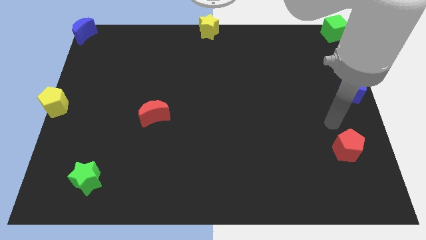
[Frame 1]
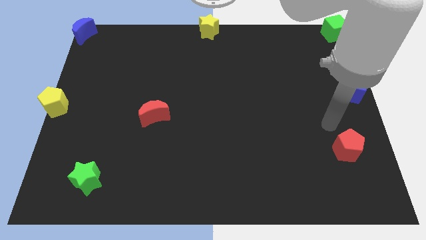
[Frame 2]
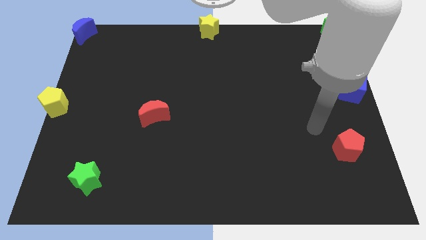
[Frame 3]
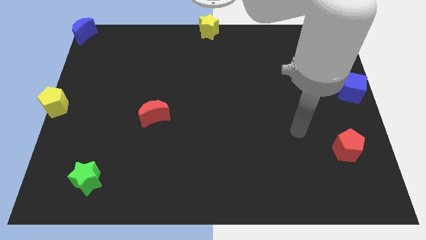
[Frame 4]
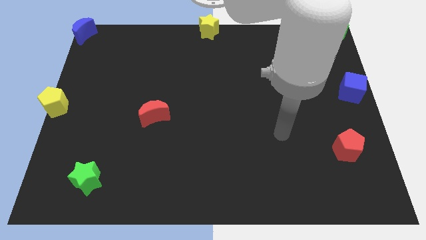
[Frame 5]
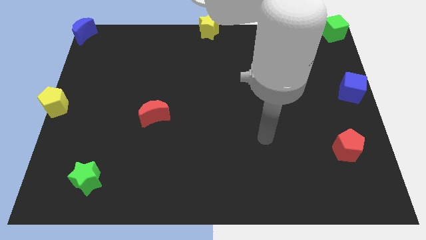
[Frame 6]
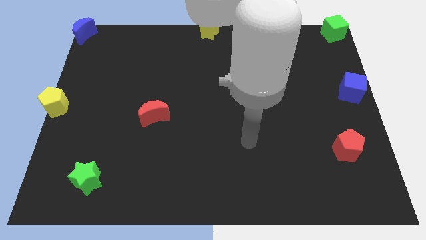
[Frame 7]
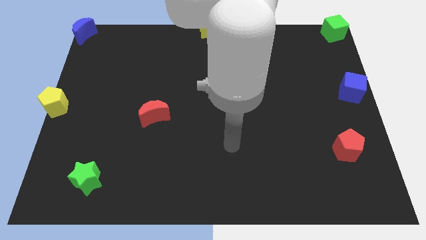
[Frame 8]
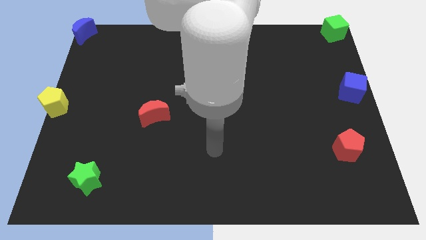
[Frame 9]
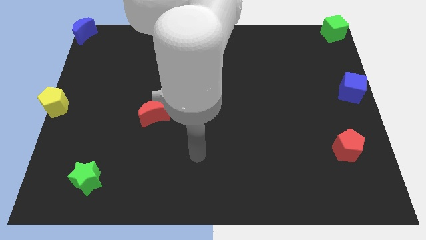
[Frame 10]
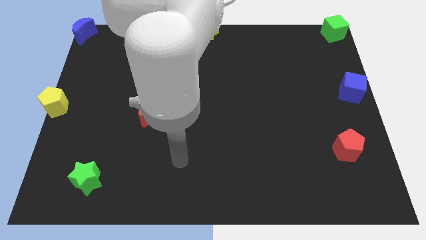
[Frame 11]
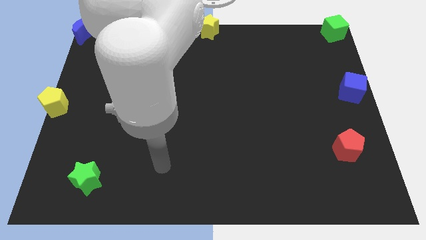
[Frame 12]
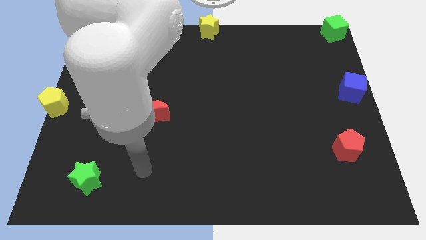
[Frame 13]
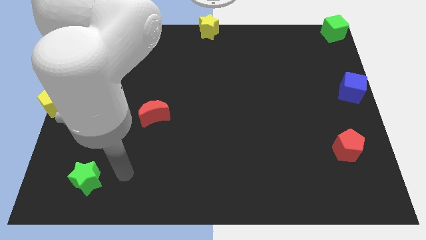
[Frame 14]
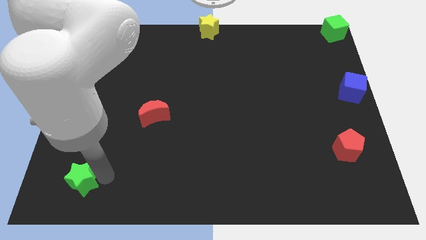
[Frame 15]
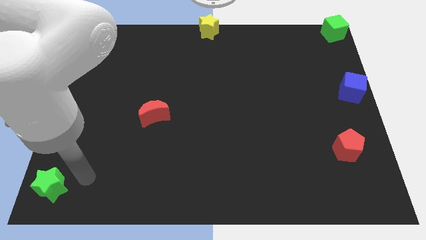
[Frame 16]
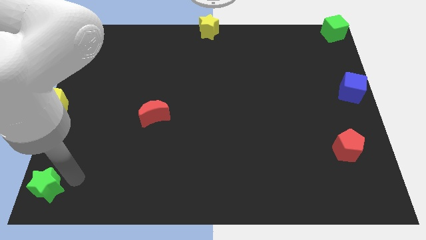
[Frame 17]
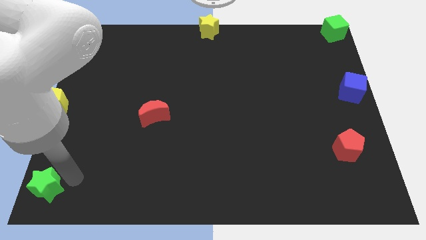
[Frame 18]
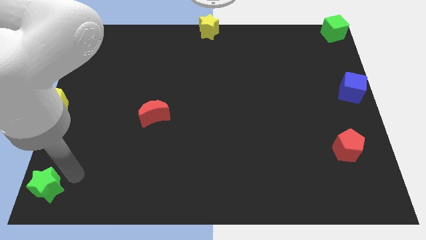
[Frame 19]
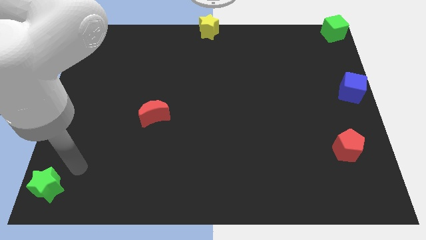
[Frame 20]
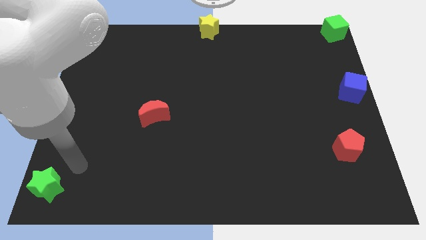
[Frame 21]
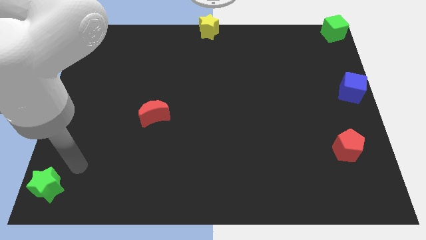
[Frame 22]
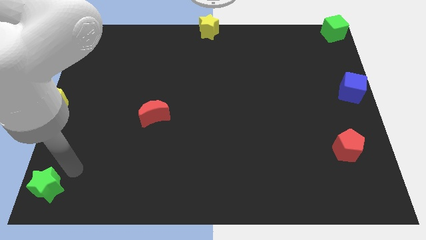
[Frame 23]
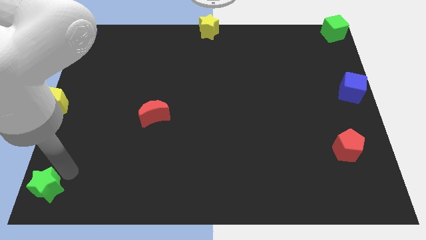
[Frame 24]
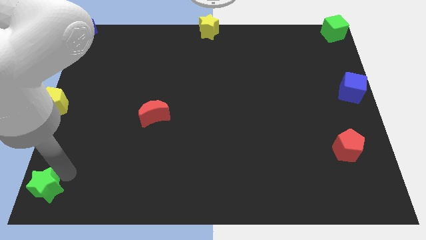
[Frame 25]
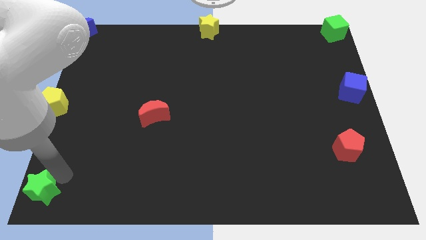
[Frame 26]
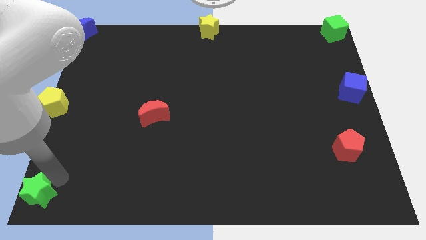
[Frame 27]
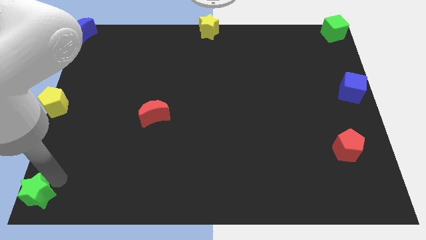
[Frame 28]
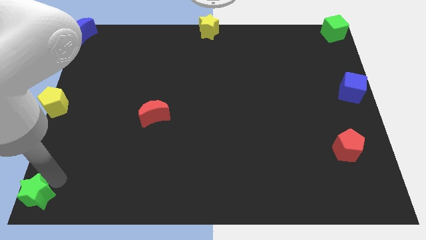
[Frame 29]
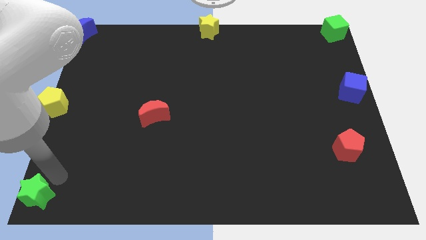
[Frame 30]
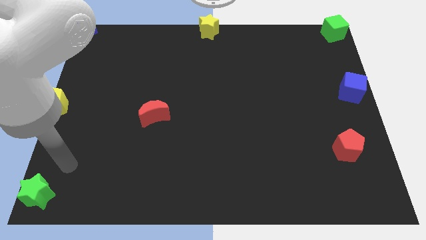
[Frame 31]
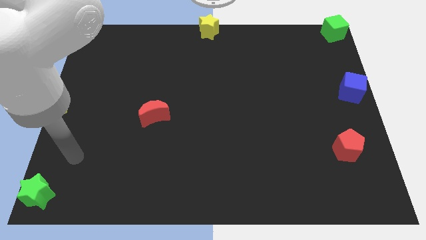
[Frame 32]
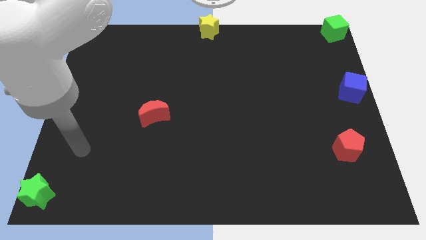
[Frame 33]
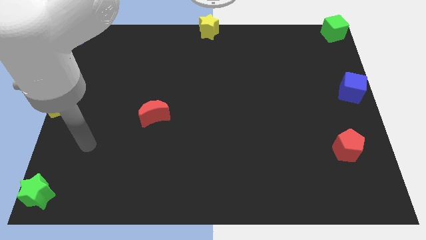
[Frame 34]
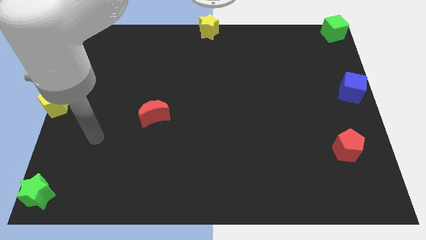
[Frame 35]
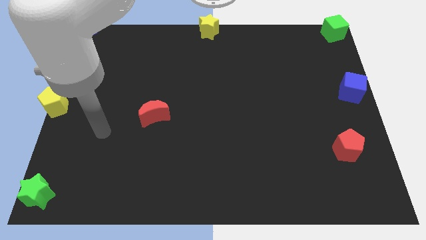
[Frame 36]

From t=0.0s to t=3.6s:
place the green star down to the yellow pentagon

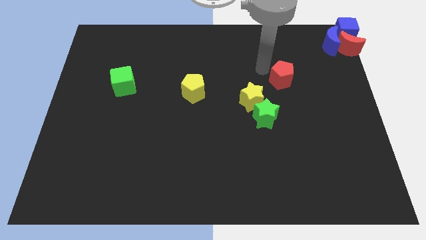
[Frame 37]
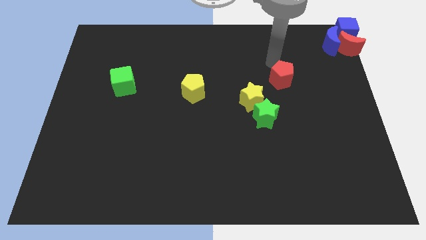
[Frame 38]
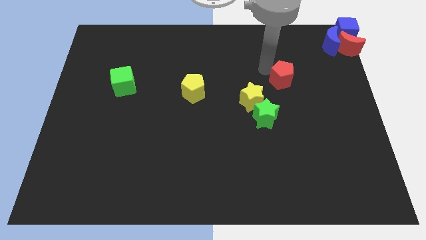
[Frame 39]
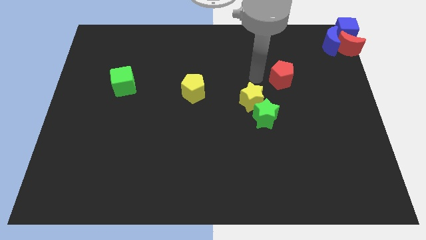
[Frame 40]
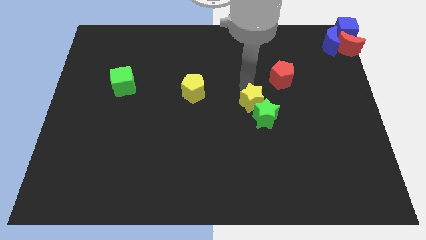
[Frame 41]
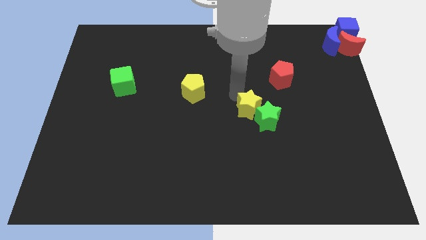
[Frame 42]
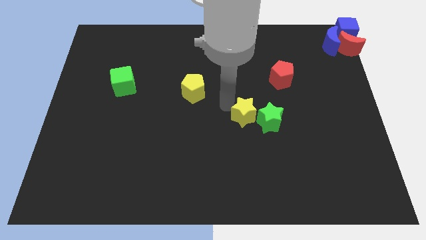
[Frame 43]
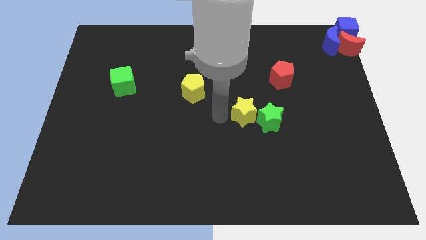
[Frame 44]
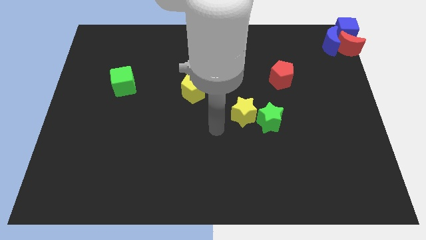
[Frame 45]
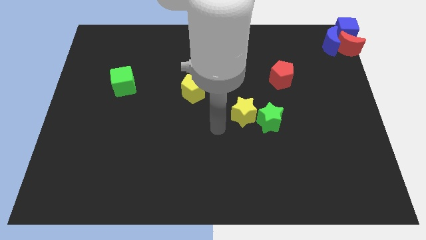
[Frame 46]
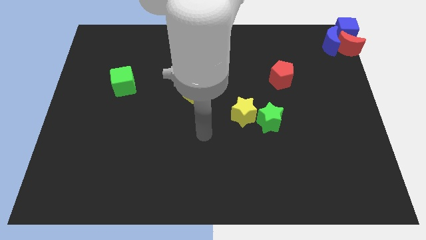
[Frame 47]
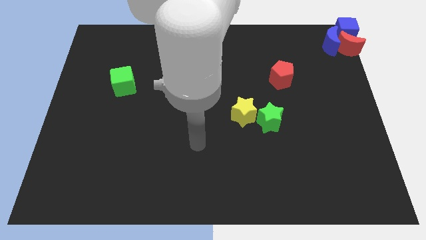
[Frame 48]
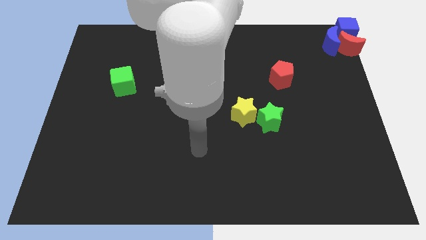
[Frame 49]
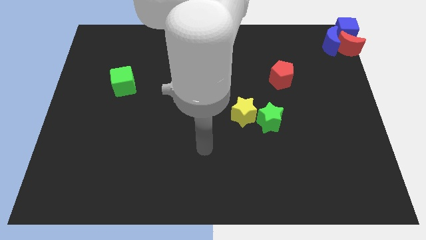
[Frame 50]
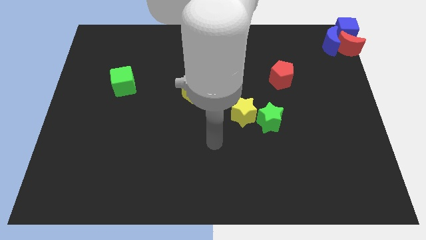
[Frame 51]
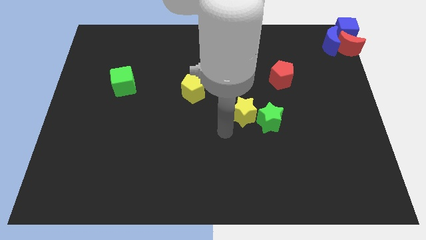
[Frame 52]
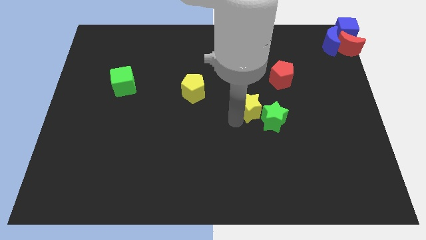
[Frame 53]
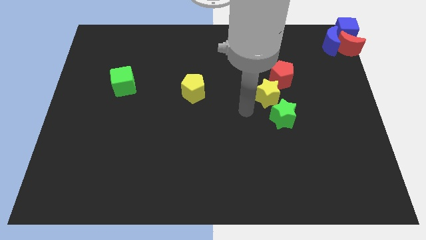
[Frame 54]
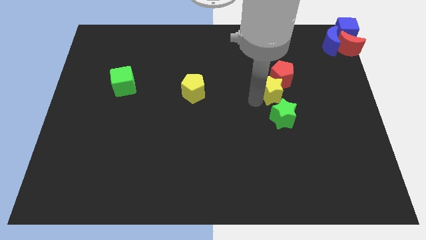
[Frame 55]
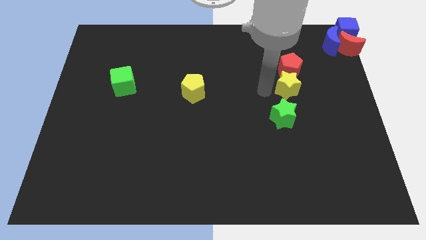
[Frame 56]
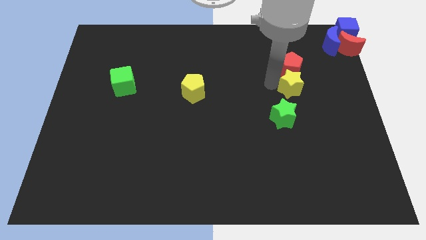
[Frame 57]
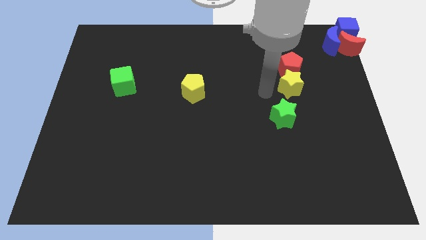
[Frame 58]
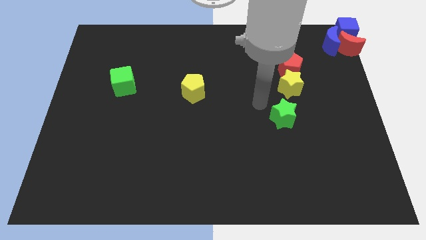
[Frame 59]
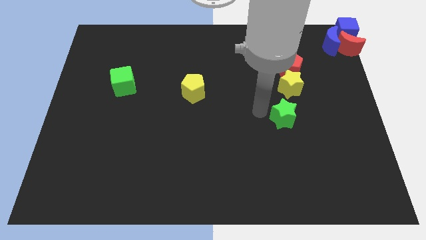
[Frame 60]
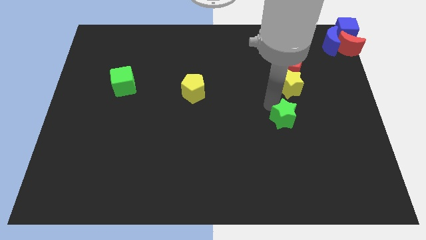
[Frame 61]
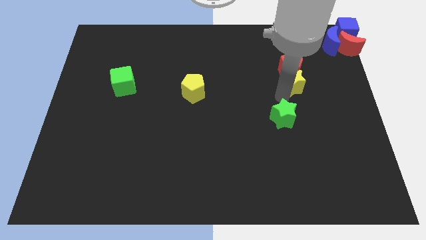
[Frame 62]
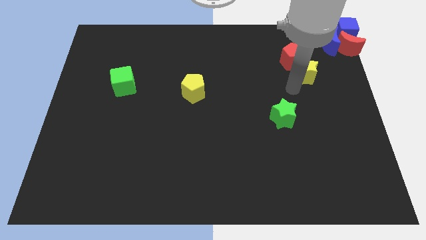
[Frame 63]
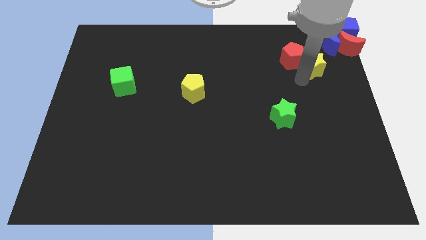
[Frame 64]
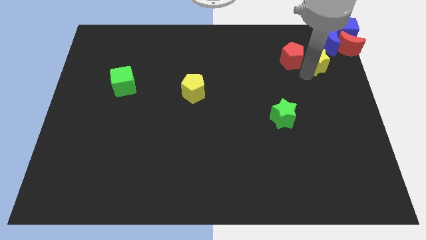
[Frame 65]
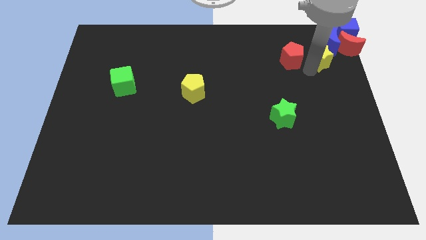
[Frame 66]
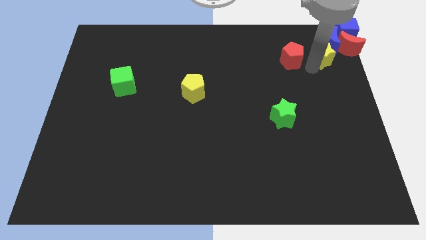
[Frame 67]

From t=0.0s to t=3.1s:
move the yellow star to the right of the red pentagon

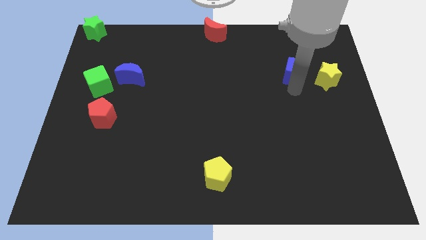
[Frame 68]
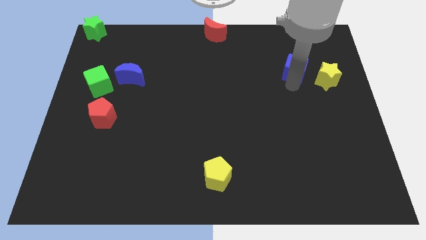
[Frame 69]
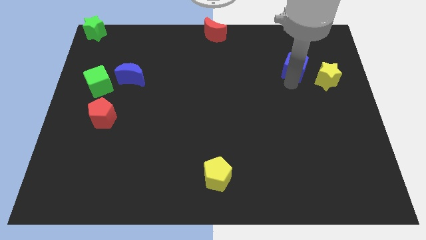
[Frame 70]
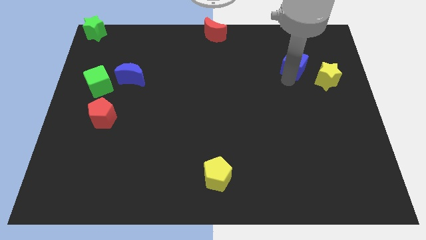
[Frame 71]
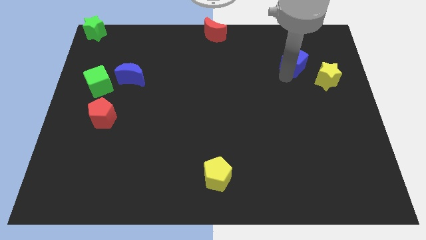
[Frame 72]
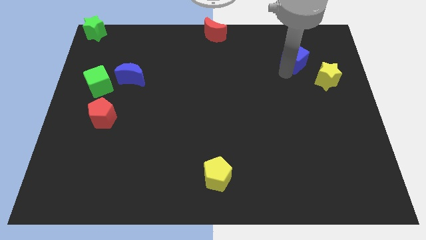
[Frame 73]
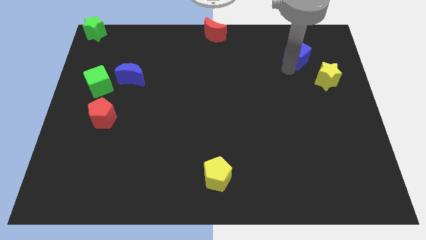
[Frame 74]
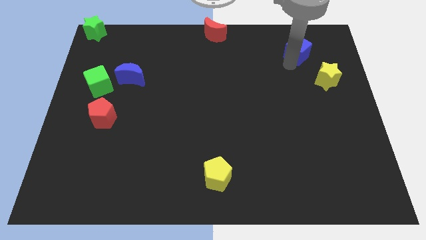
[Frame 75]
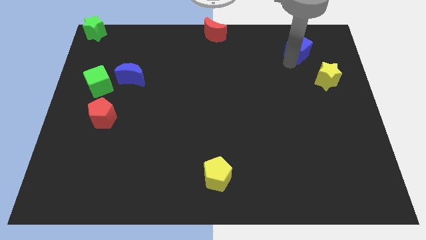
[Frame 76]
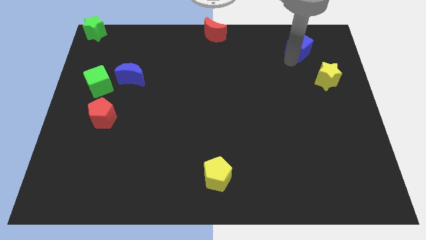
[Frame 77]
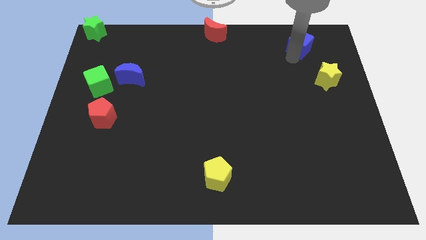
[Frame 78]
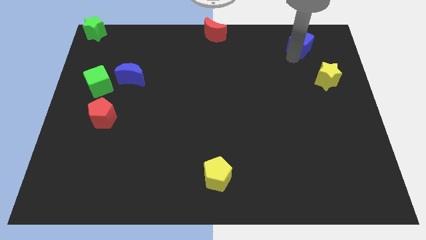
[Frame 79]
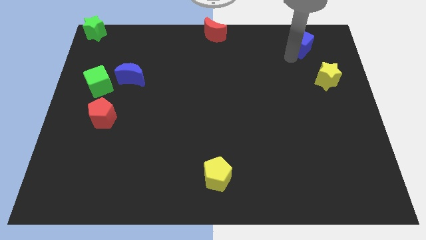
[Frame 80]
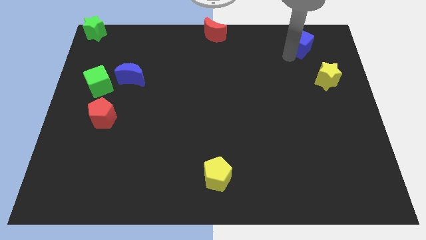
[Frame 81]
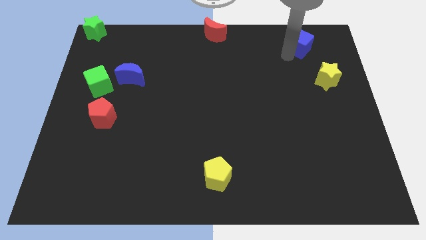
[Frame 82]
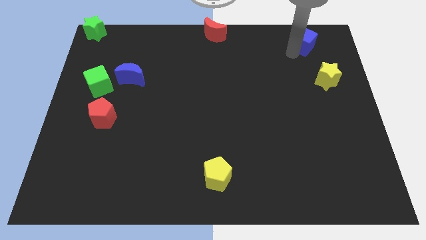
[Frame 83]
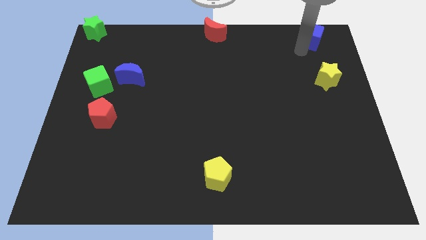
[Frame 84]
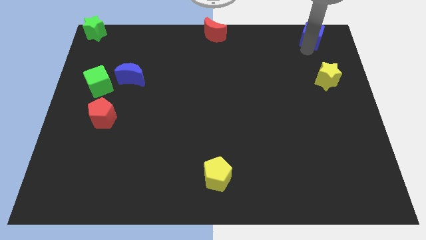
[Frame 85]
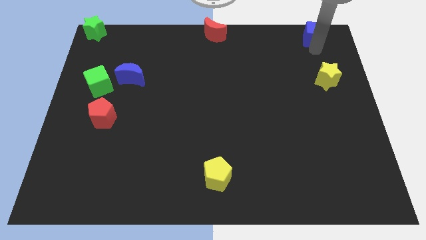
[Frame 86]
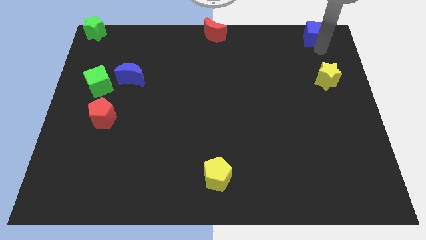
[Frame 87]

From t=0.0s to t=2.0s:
move the blue cube above the yellow star

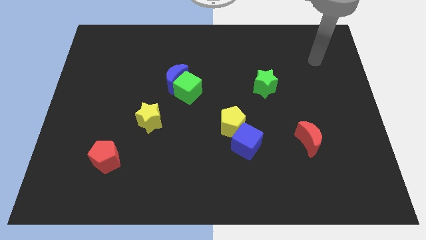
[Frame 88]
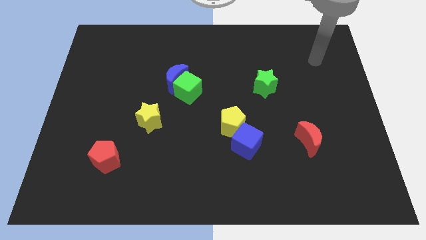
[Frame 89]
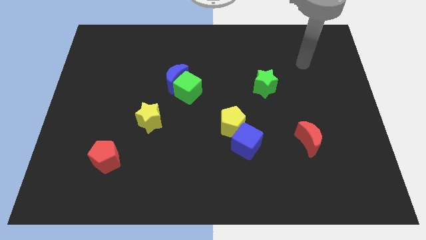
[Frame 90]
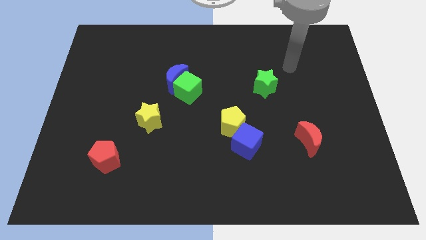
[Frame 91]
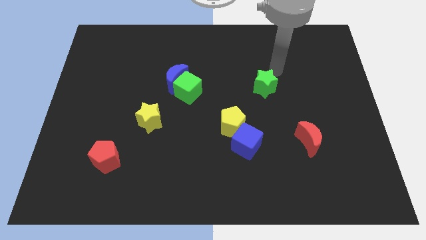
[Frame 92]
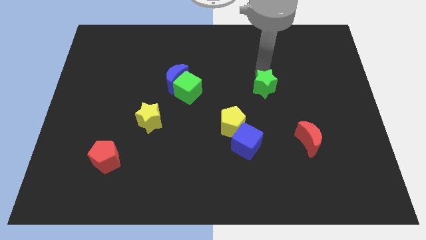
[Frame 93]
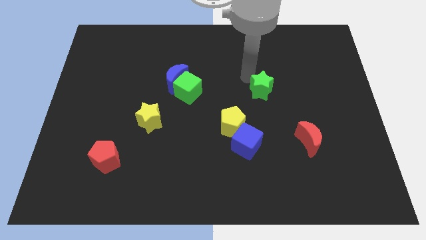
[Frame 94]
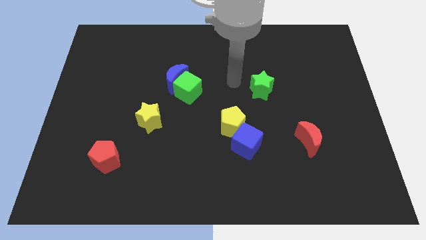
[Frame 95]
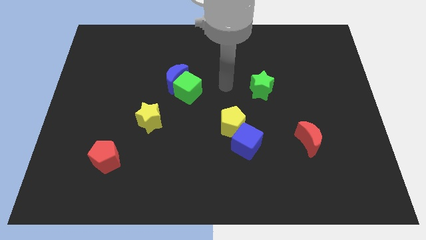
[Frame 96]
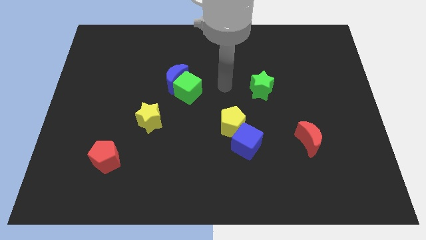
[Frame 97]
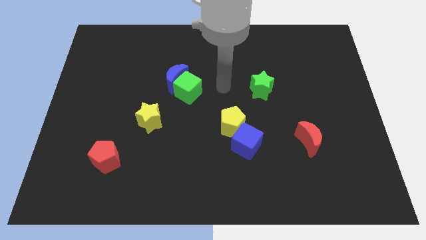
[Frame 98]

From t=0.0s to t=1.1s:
move the green star slightly
